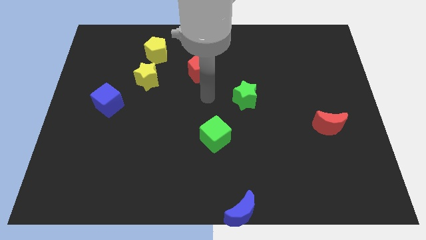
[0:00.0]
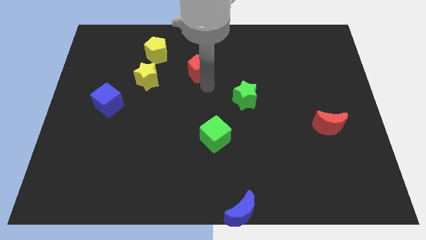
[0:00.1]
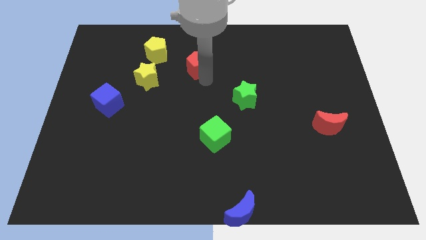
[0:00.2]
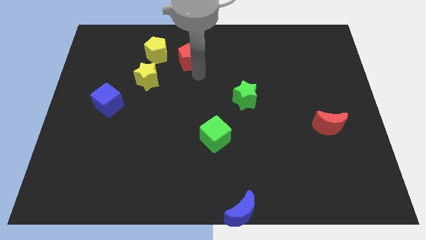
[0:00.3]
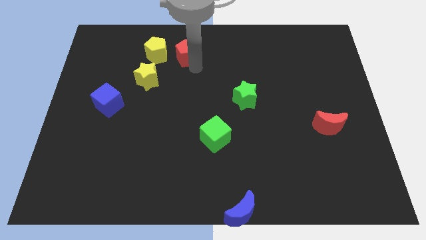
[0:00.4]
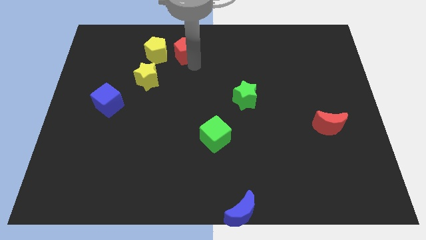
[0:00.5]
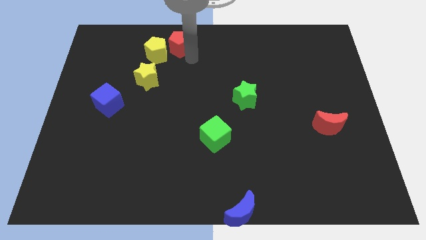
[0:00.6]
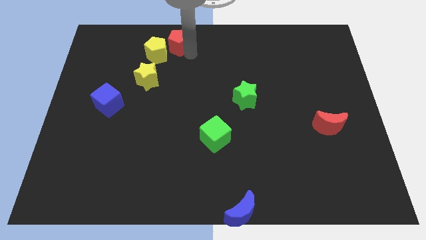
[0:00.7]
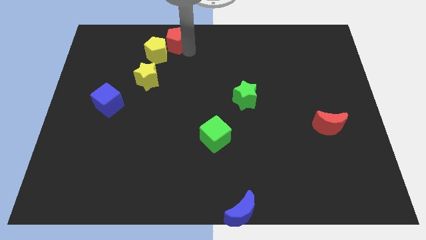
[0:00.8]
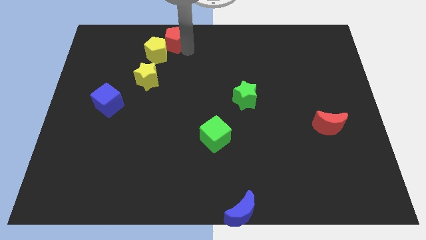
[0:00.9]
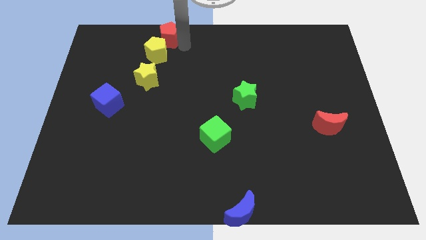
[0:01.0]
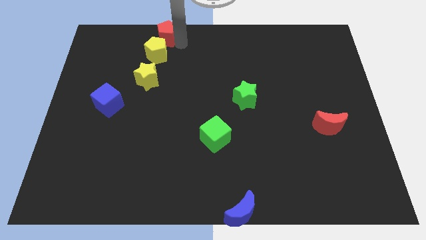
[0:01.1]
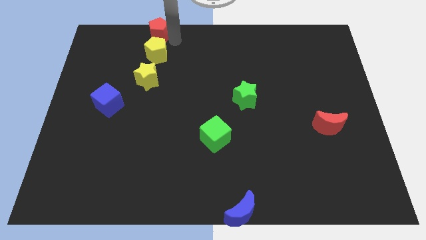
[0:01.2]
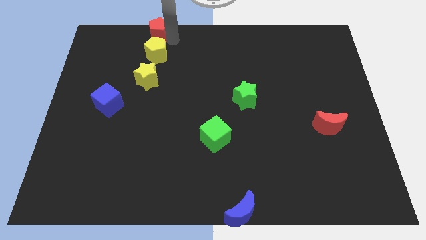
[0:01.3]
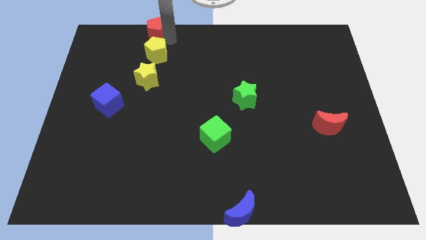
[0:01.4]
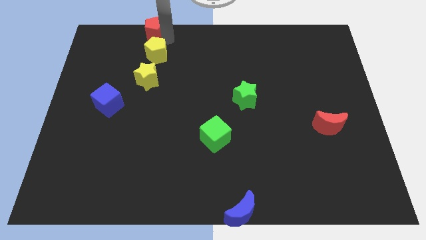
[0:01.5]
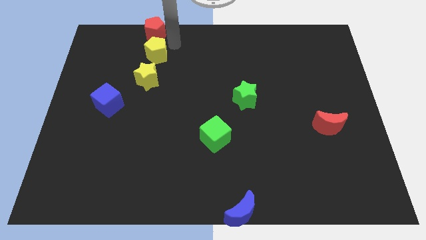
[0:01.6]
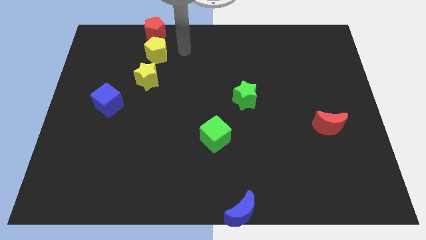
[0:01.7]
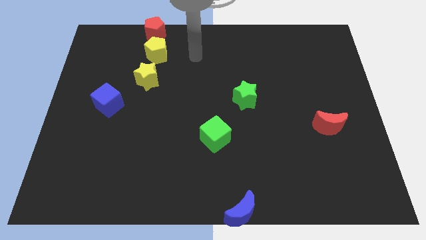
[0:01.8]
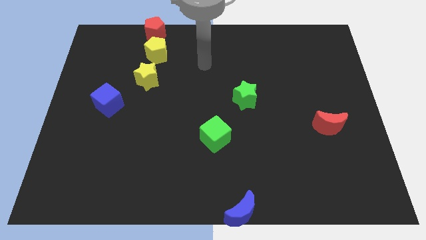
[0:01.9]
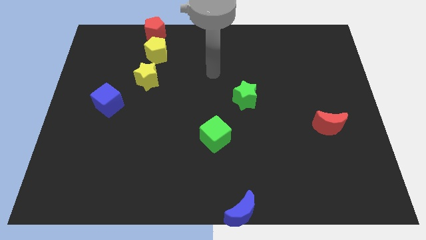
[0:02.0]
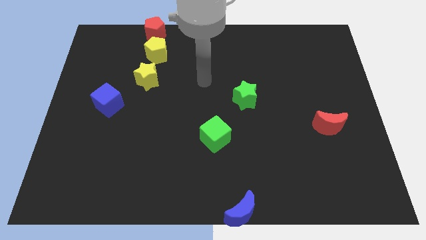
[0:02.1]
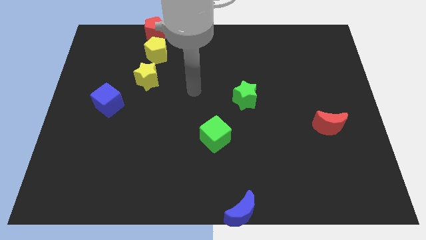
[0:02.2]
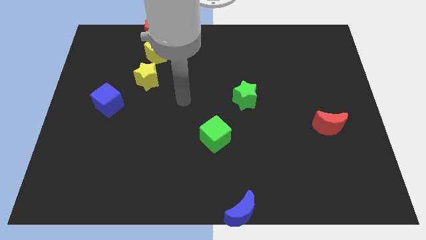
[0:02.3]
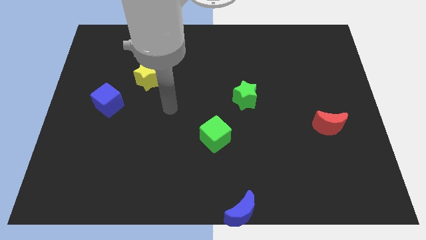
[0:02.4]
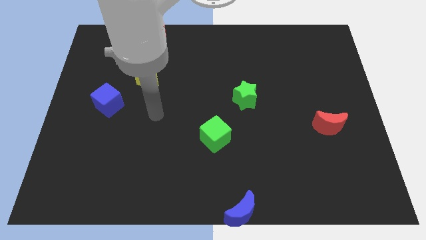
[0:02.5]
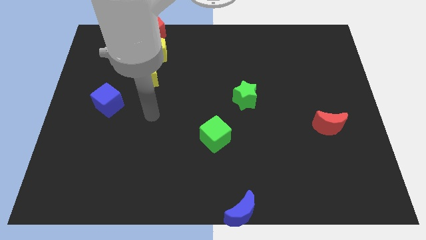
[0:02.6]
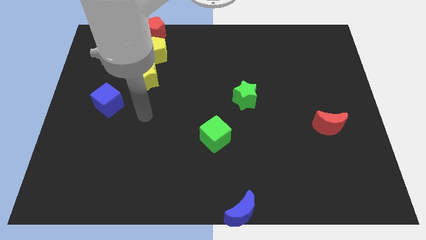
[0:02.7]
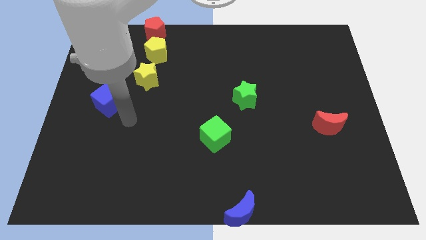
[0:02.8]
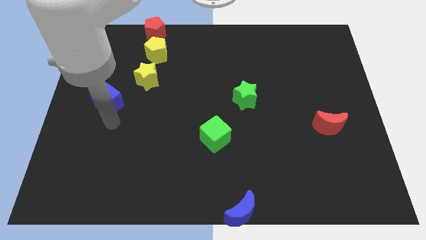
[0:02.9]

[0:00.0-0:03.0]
move the red pentagon above the yellow pentagon and move away

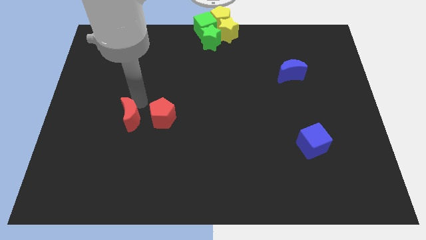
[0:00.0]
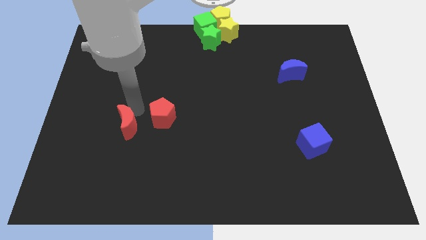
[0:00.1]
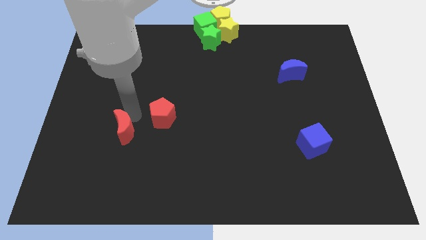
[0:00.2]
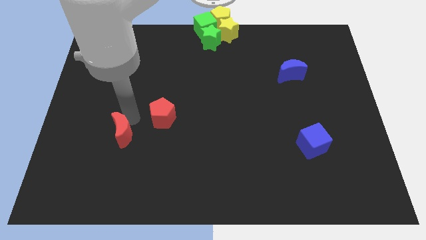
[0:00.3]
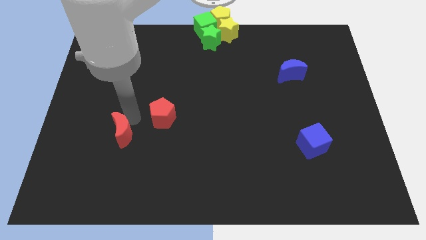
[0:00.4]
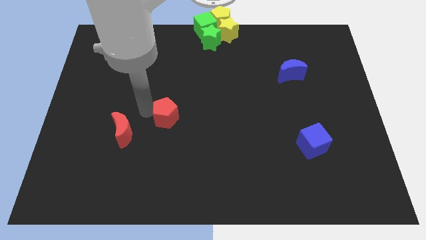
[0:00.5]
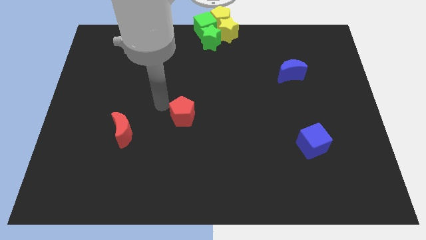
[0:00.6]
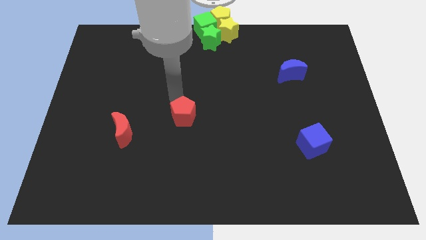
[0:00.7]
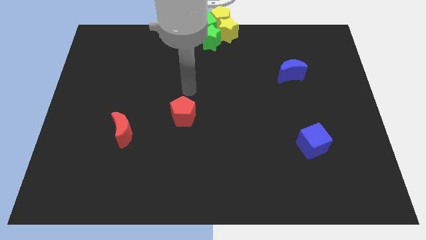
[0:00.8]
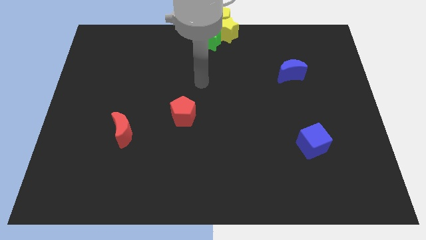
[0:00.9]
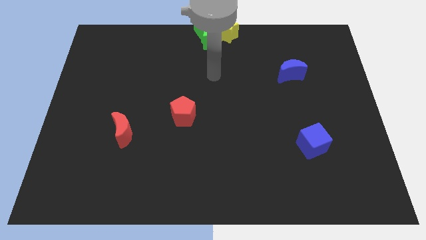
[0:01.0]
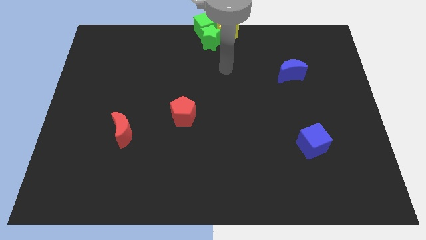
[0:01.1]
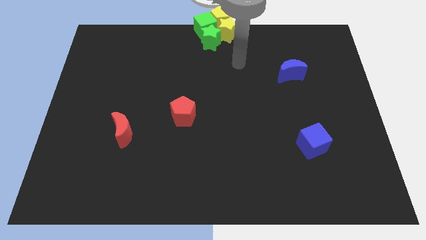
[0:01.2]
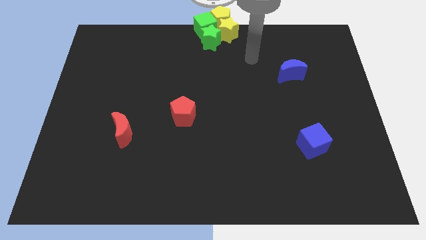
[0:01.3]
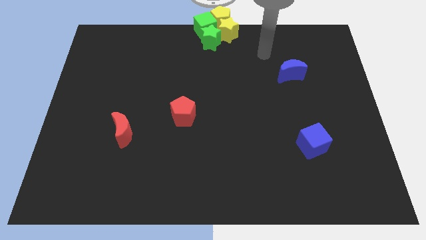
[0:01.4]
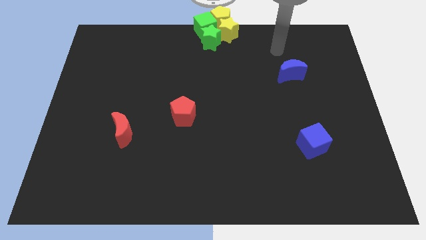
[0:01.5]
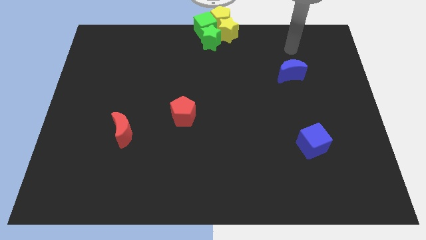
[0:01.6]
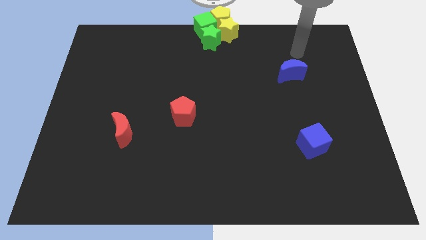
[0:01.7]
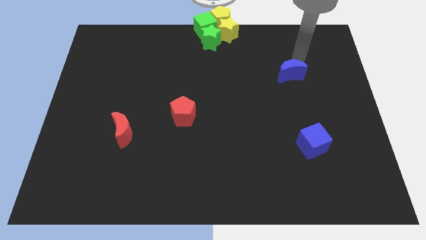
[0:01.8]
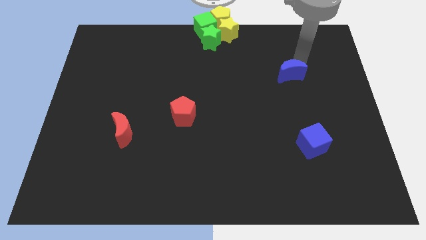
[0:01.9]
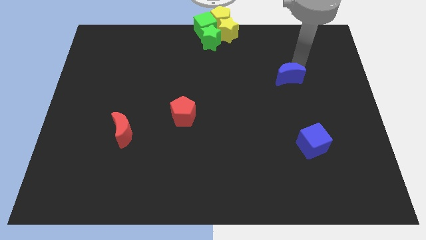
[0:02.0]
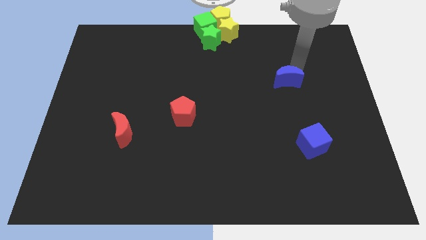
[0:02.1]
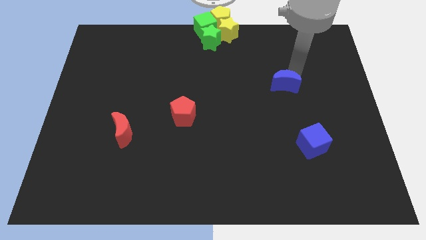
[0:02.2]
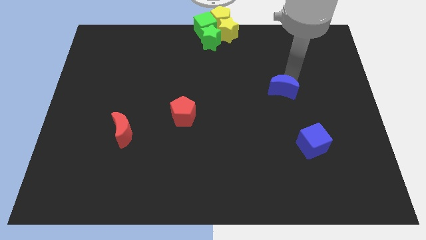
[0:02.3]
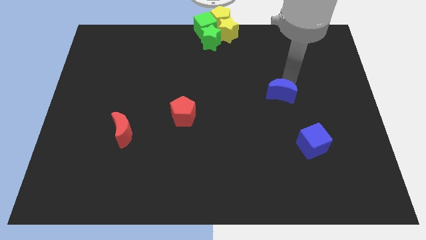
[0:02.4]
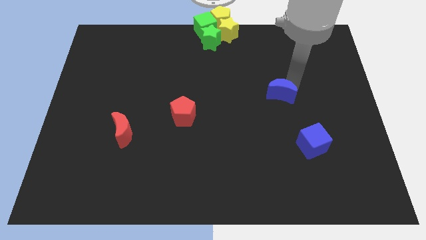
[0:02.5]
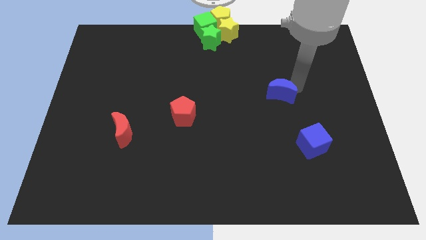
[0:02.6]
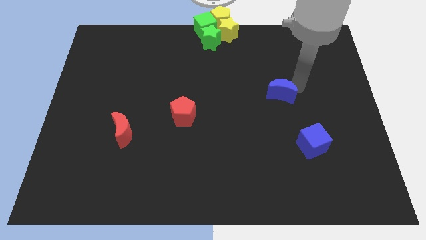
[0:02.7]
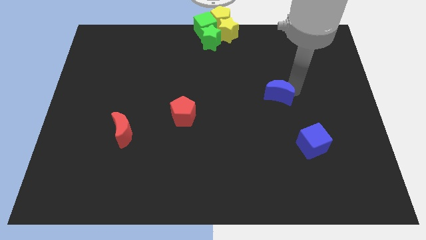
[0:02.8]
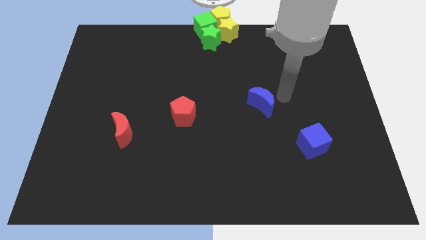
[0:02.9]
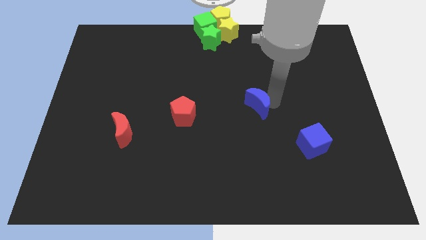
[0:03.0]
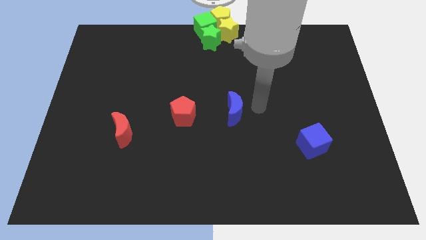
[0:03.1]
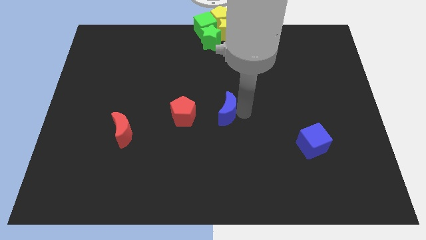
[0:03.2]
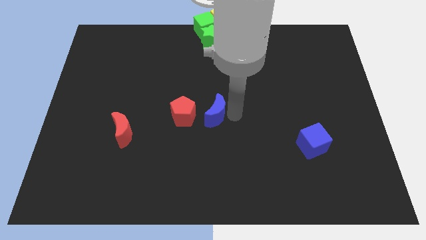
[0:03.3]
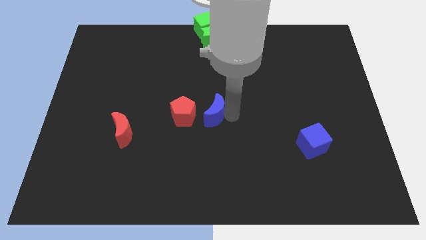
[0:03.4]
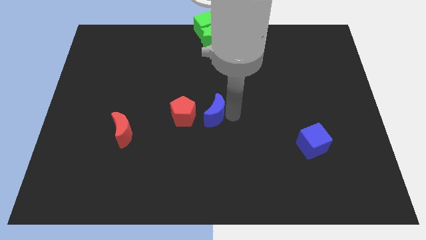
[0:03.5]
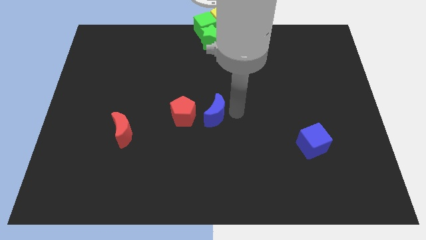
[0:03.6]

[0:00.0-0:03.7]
move blue moon to the right of red pentagon

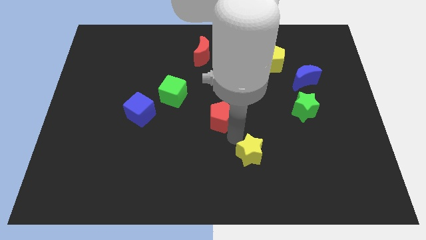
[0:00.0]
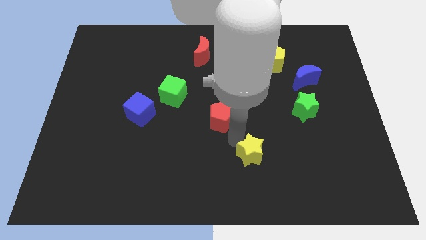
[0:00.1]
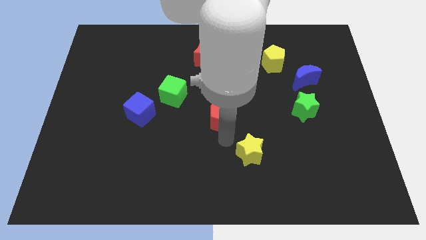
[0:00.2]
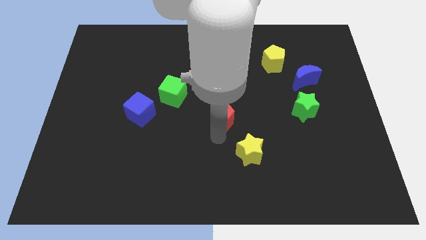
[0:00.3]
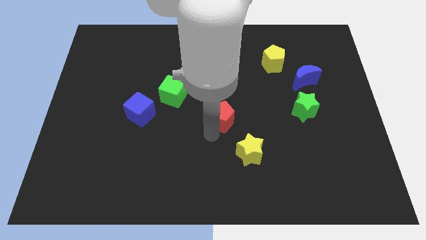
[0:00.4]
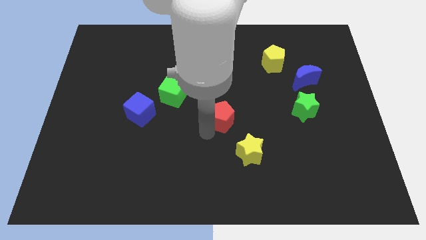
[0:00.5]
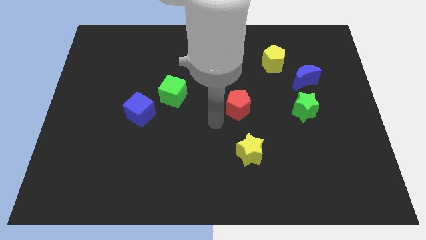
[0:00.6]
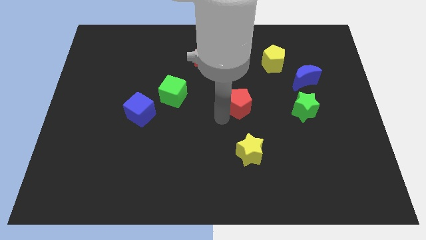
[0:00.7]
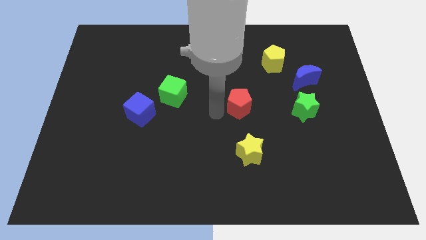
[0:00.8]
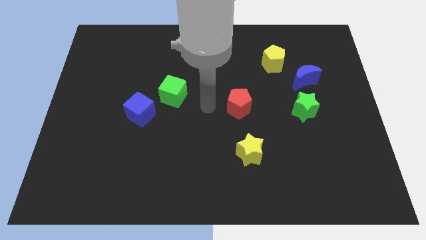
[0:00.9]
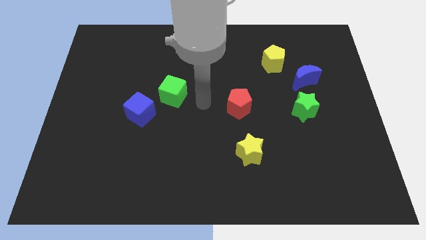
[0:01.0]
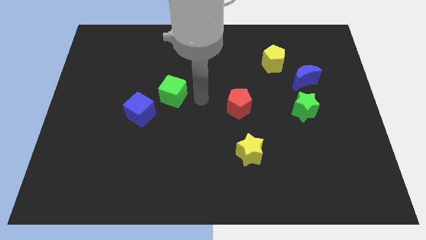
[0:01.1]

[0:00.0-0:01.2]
put the red pentagon between the green cube and green star

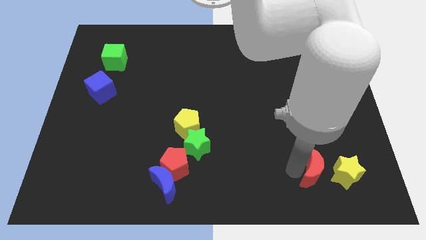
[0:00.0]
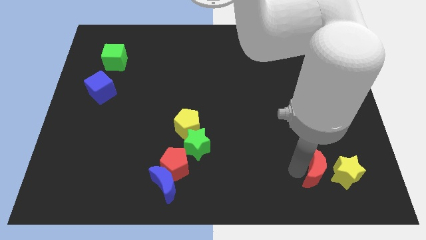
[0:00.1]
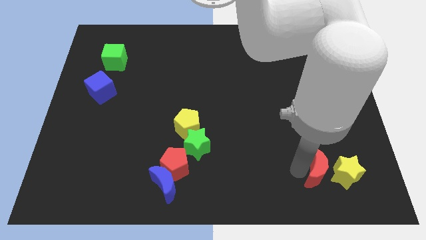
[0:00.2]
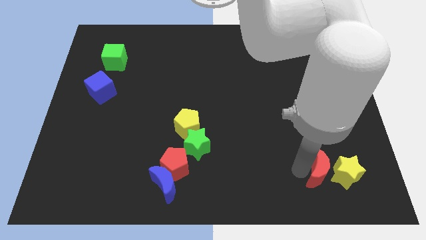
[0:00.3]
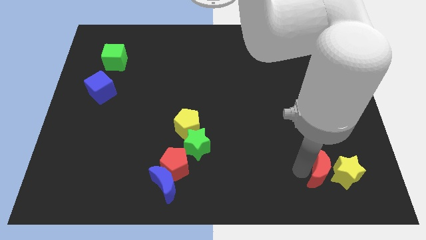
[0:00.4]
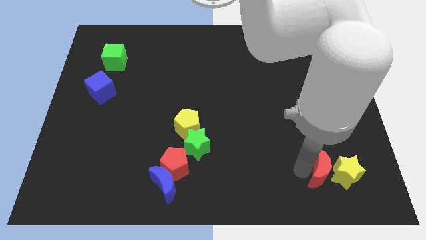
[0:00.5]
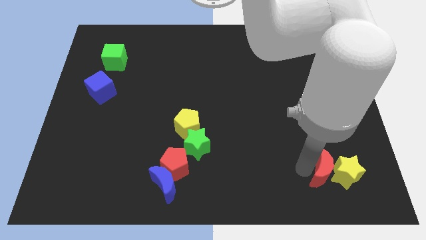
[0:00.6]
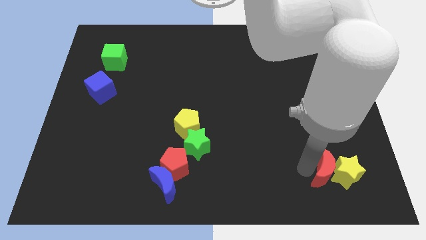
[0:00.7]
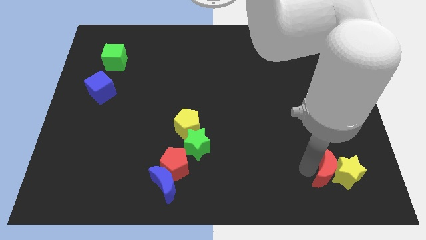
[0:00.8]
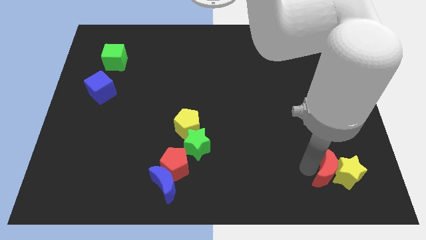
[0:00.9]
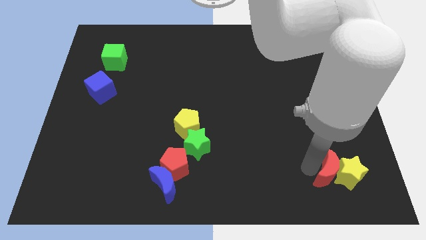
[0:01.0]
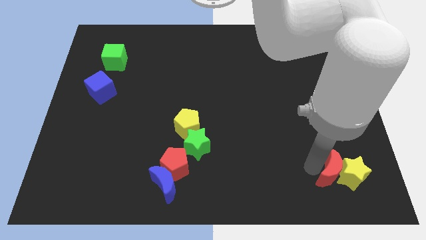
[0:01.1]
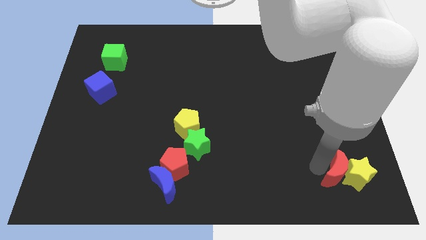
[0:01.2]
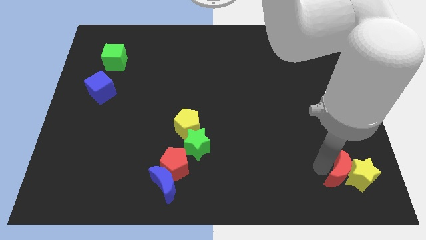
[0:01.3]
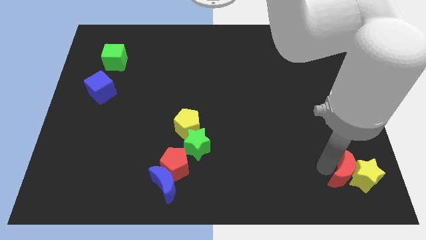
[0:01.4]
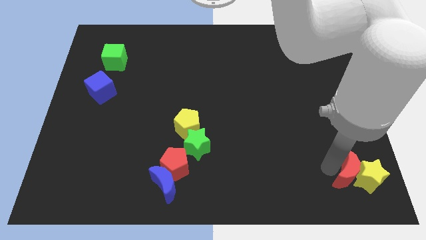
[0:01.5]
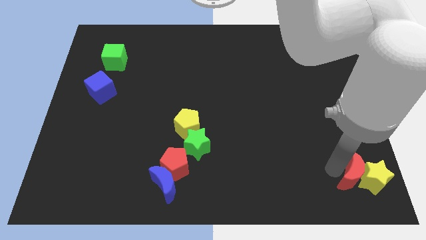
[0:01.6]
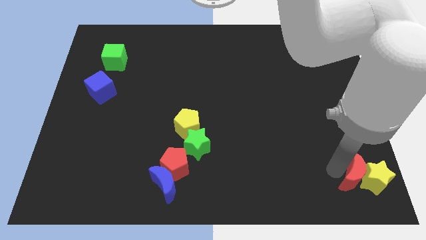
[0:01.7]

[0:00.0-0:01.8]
push the red crescent into the yellow star
